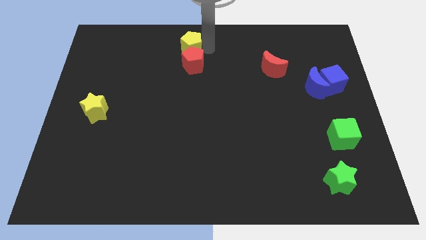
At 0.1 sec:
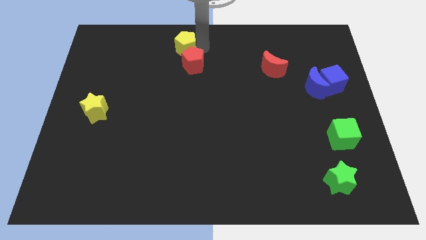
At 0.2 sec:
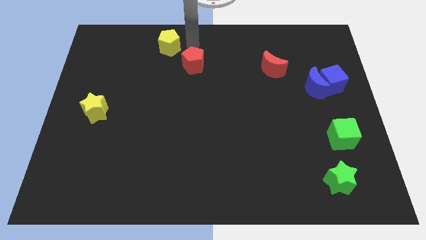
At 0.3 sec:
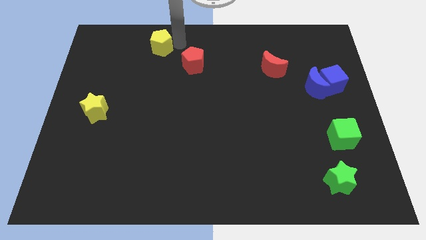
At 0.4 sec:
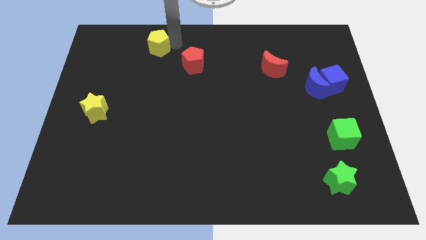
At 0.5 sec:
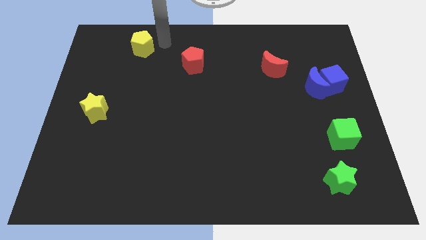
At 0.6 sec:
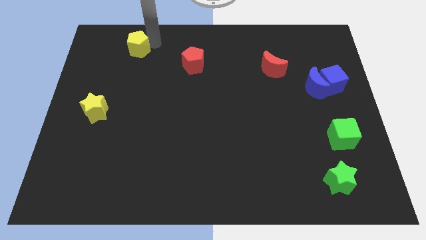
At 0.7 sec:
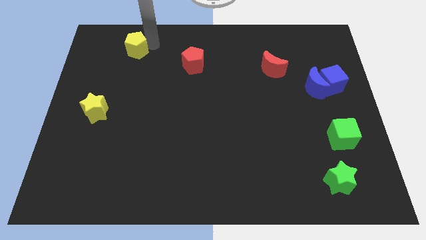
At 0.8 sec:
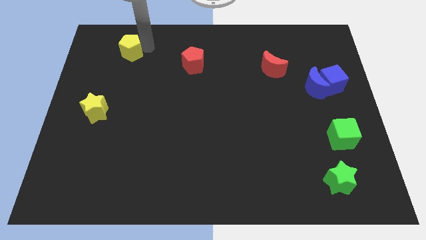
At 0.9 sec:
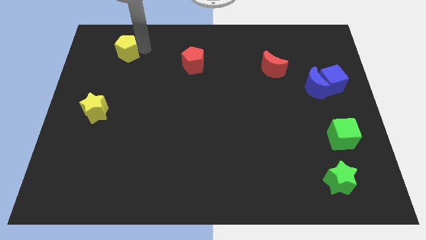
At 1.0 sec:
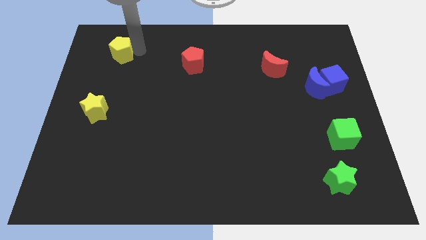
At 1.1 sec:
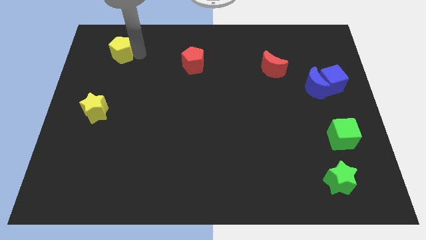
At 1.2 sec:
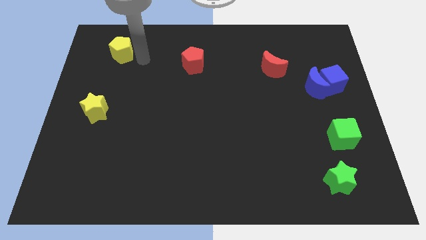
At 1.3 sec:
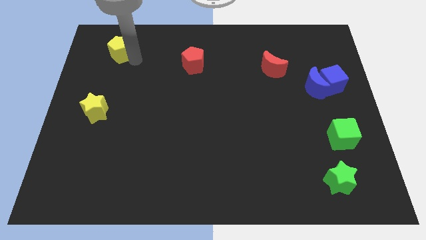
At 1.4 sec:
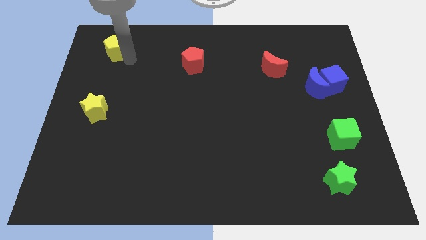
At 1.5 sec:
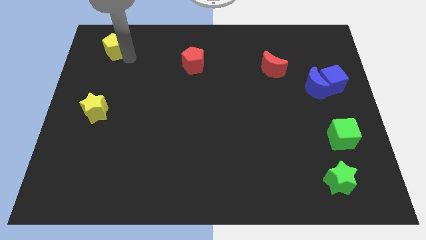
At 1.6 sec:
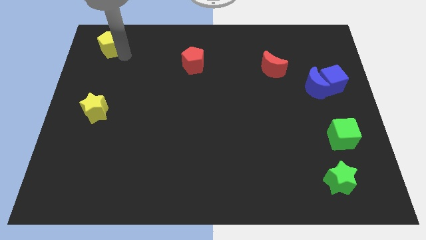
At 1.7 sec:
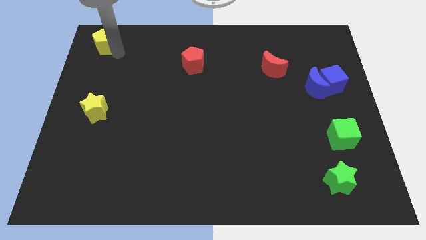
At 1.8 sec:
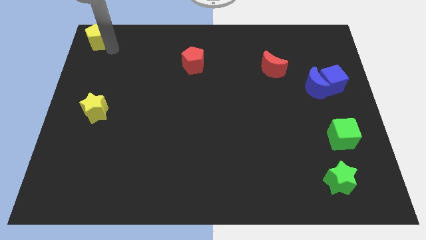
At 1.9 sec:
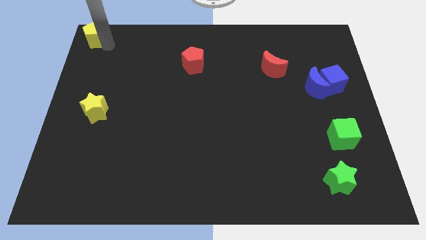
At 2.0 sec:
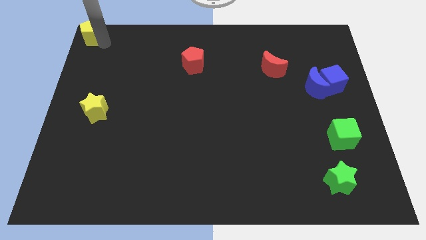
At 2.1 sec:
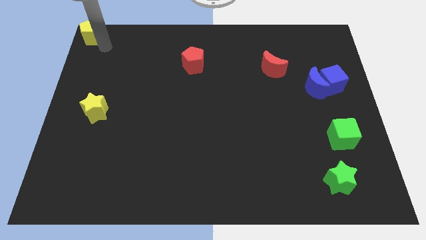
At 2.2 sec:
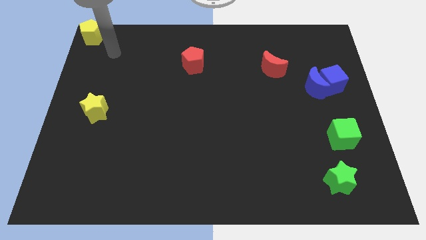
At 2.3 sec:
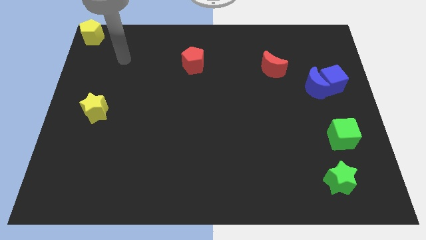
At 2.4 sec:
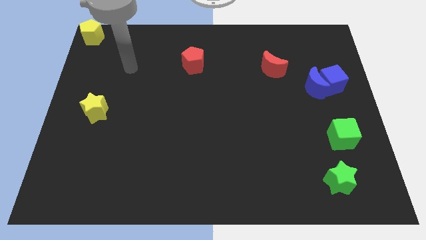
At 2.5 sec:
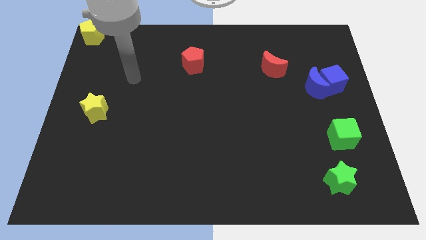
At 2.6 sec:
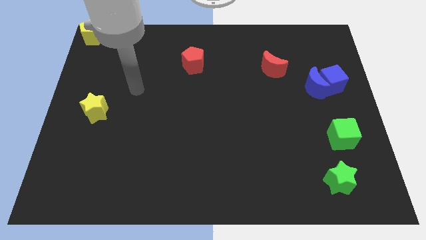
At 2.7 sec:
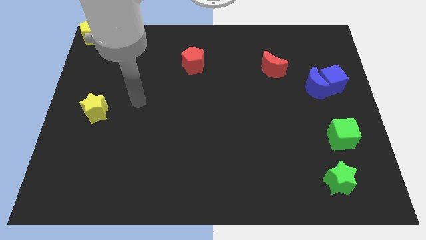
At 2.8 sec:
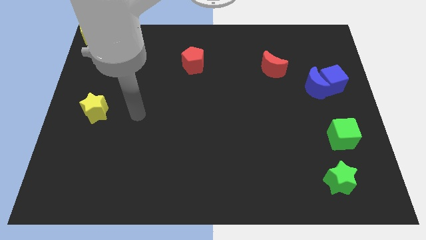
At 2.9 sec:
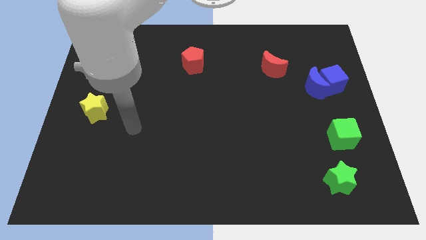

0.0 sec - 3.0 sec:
push the yellow pentagon to the top left corner of the board

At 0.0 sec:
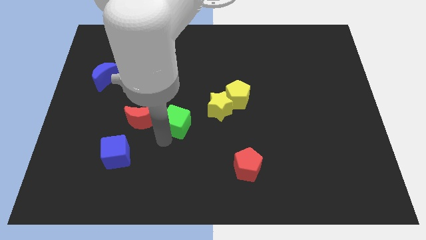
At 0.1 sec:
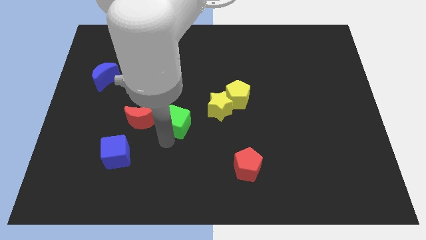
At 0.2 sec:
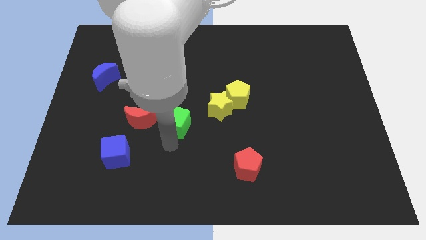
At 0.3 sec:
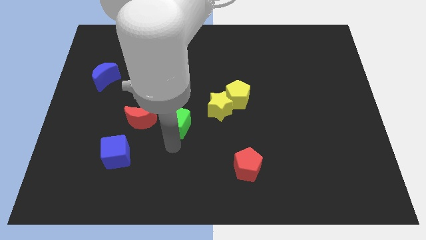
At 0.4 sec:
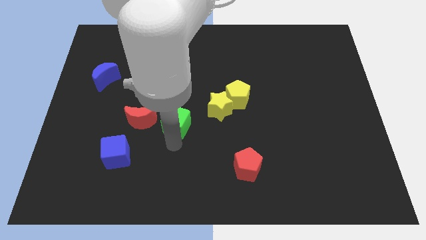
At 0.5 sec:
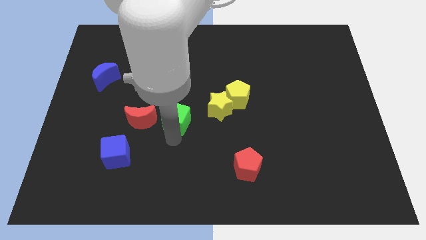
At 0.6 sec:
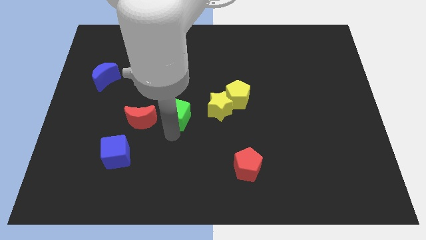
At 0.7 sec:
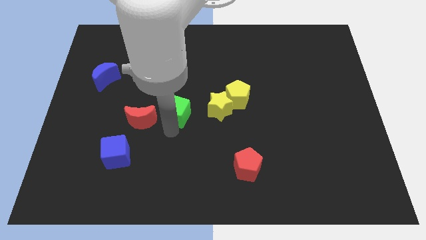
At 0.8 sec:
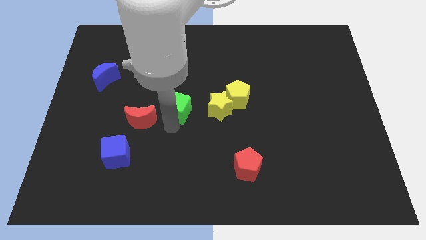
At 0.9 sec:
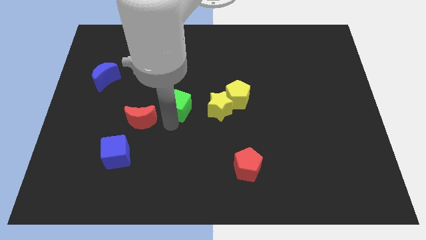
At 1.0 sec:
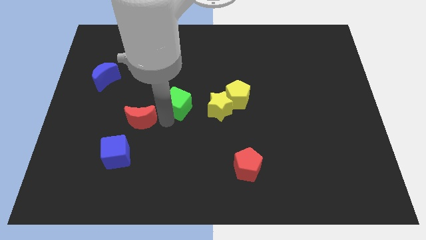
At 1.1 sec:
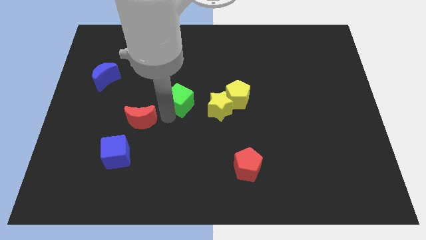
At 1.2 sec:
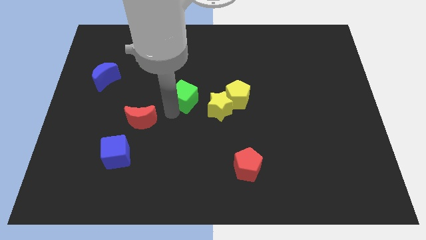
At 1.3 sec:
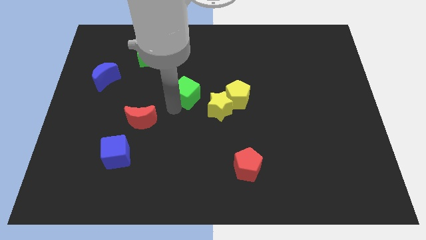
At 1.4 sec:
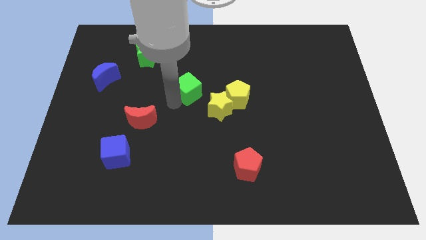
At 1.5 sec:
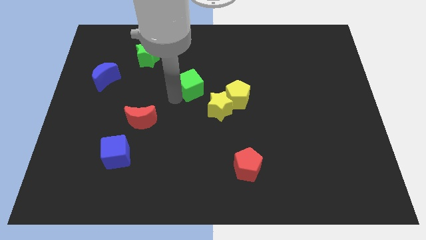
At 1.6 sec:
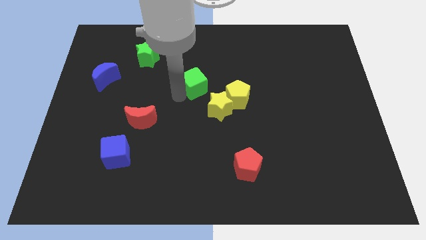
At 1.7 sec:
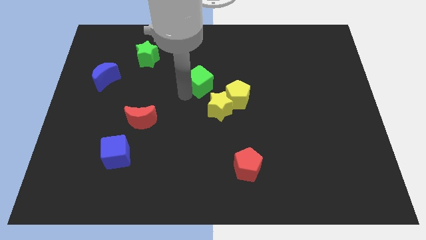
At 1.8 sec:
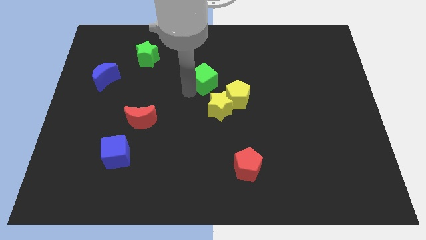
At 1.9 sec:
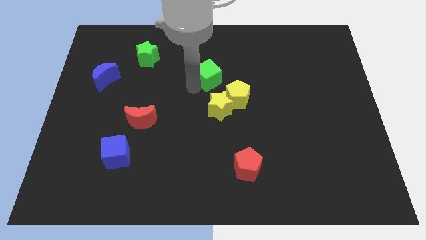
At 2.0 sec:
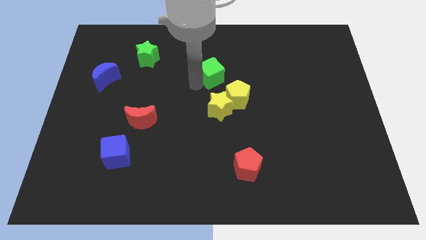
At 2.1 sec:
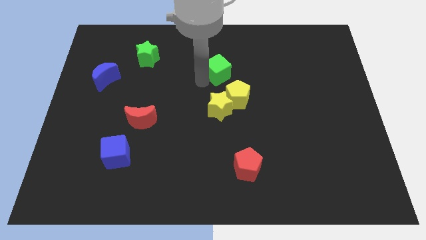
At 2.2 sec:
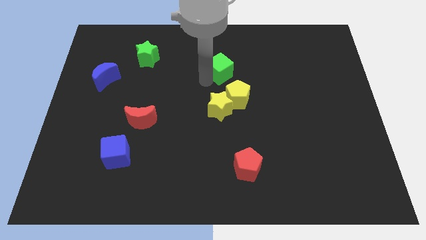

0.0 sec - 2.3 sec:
put the green cube above the yellow star

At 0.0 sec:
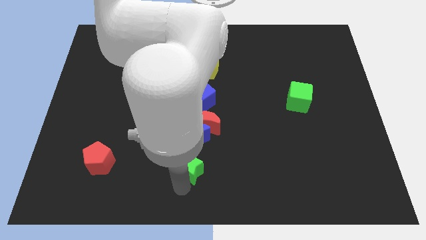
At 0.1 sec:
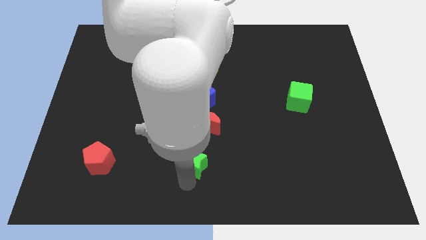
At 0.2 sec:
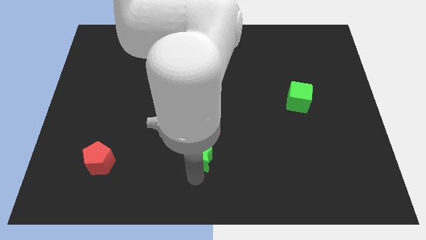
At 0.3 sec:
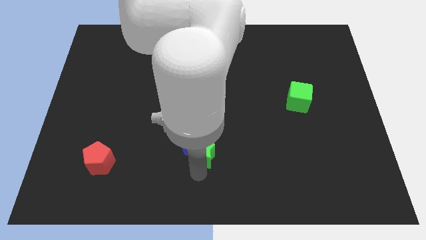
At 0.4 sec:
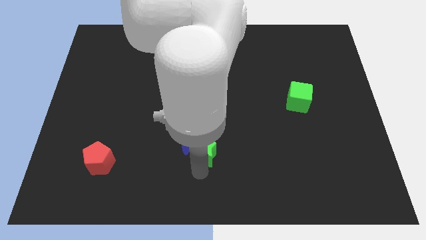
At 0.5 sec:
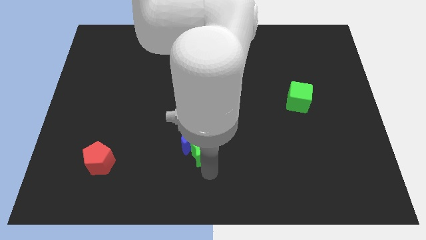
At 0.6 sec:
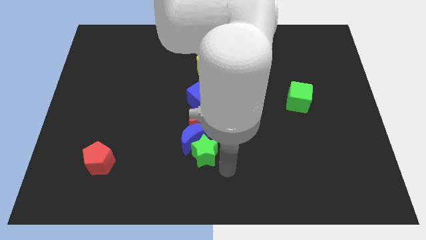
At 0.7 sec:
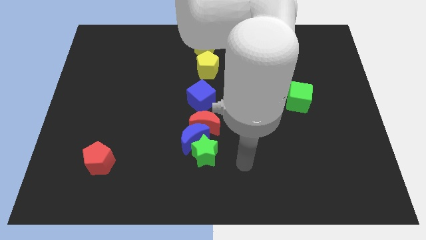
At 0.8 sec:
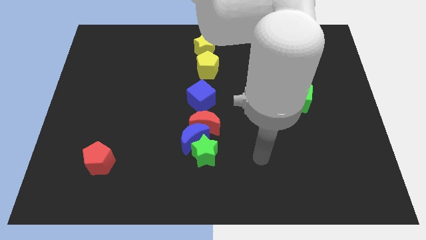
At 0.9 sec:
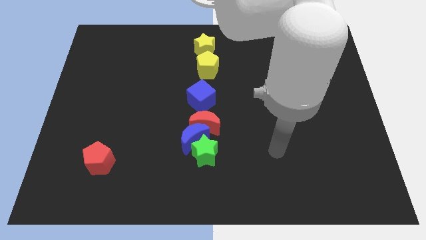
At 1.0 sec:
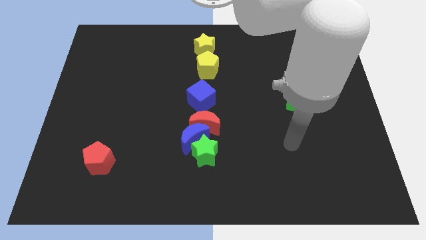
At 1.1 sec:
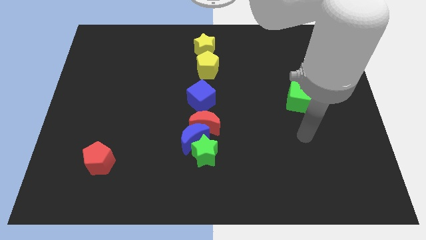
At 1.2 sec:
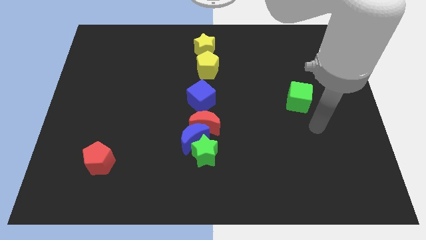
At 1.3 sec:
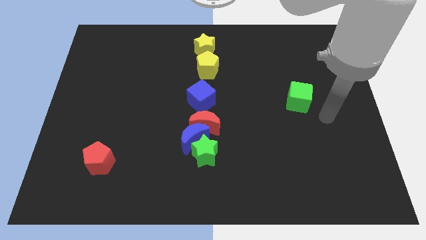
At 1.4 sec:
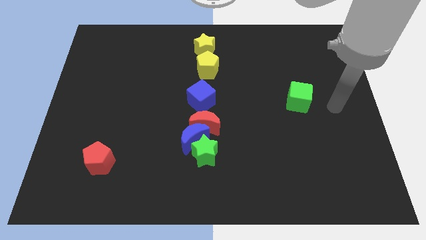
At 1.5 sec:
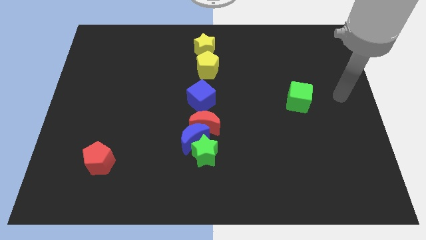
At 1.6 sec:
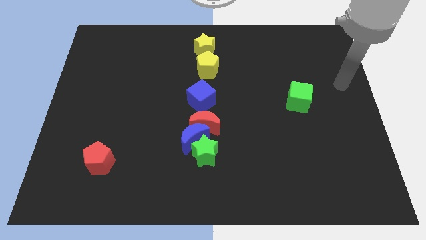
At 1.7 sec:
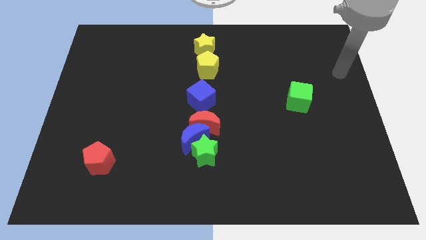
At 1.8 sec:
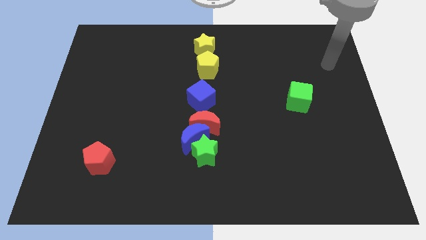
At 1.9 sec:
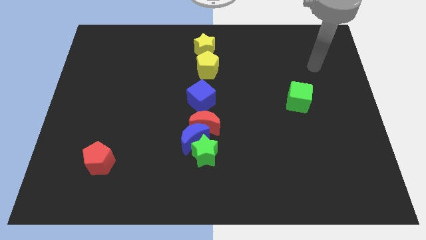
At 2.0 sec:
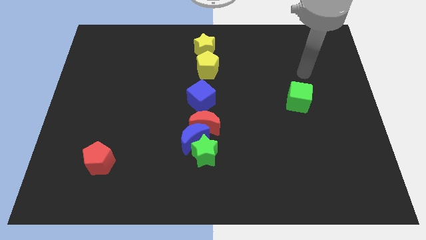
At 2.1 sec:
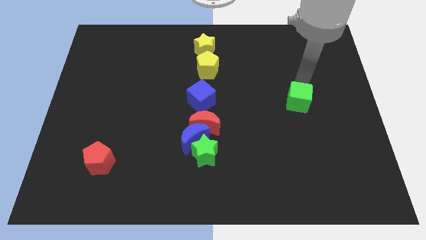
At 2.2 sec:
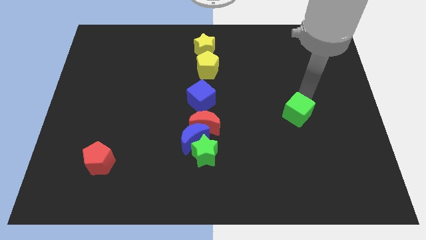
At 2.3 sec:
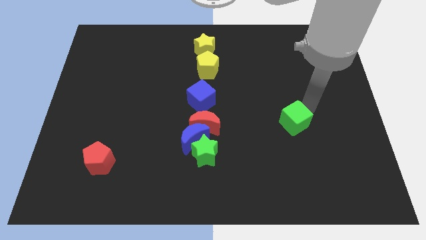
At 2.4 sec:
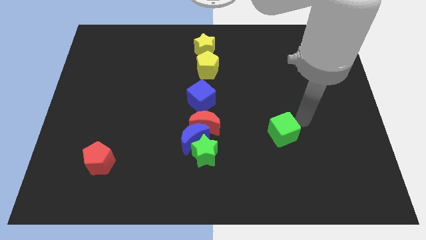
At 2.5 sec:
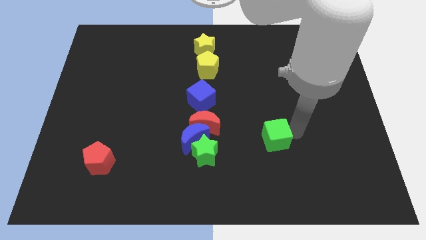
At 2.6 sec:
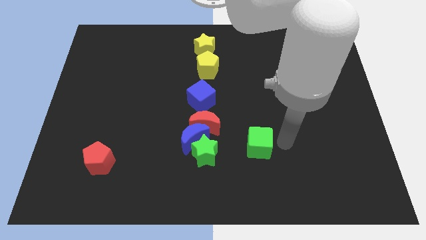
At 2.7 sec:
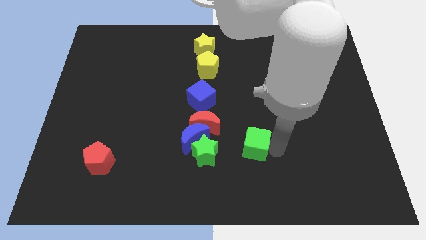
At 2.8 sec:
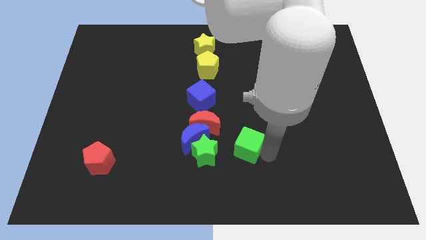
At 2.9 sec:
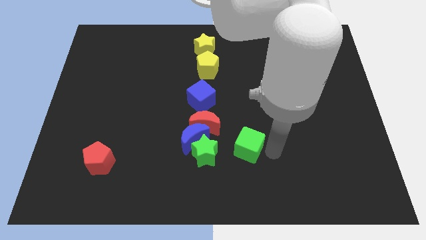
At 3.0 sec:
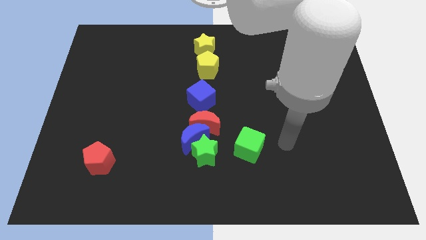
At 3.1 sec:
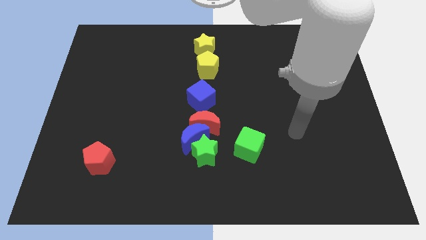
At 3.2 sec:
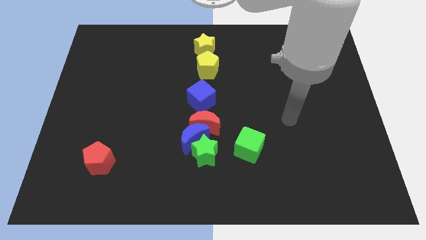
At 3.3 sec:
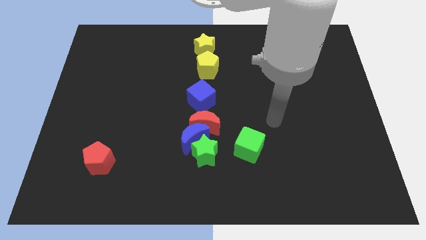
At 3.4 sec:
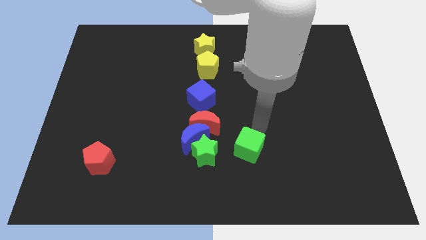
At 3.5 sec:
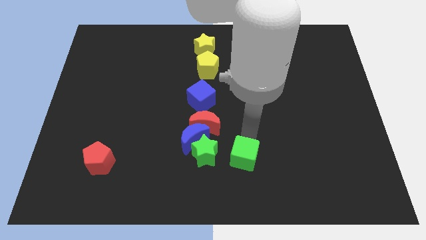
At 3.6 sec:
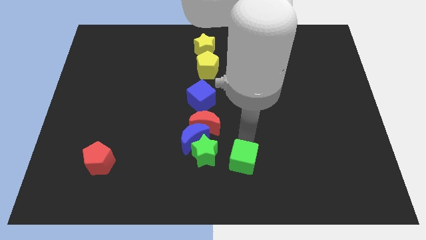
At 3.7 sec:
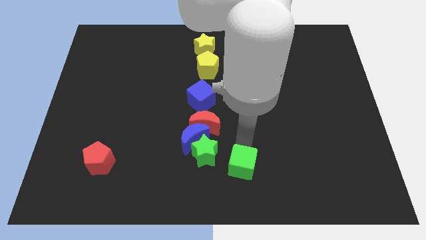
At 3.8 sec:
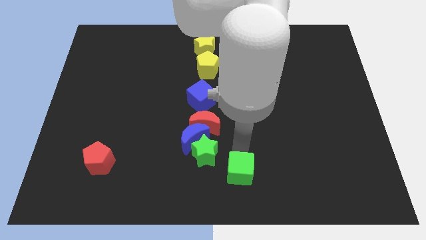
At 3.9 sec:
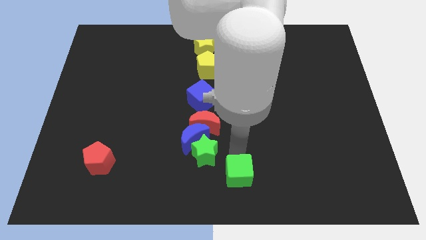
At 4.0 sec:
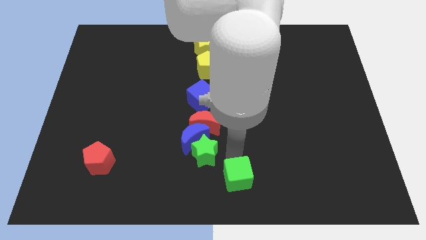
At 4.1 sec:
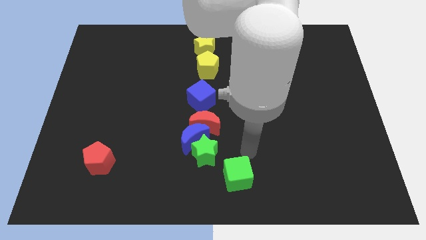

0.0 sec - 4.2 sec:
drag the green cube to the bottom right side of the green star
